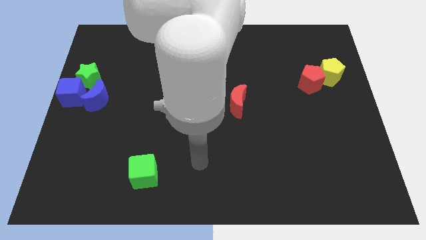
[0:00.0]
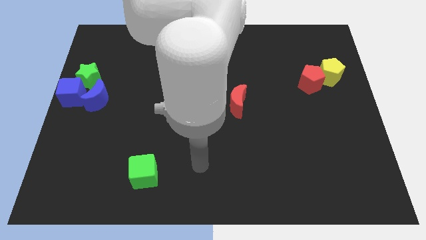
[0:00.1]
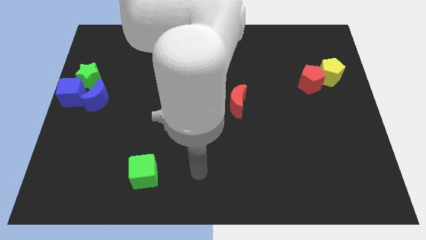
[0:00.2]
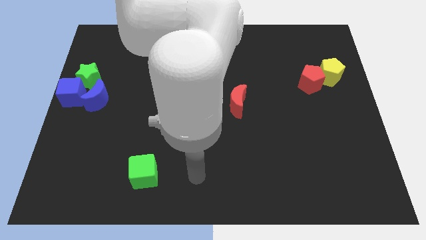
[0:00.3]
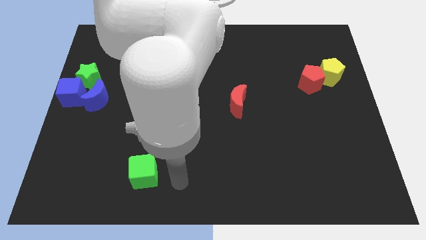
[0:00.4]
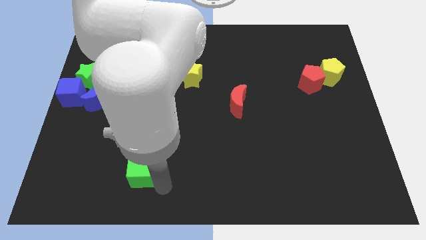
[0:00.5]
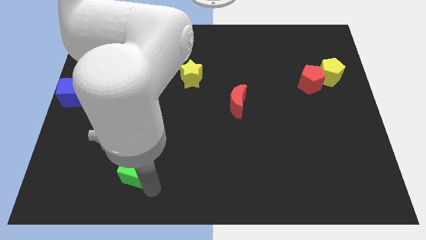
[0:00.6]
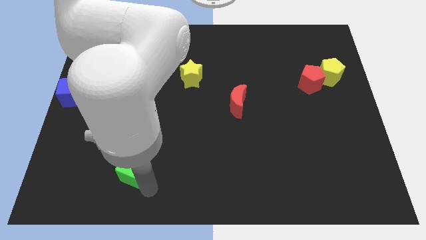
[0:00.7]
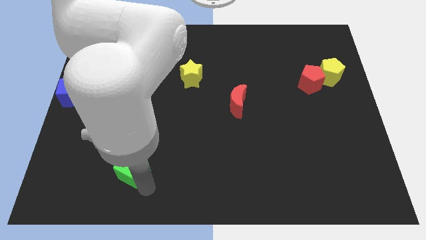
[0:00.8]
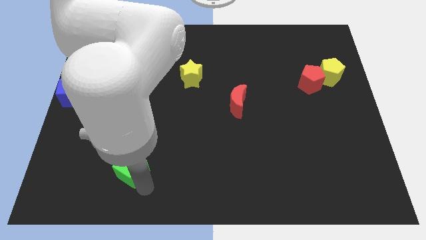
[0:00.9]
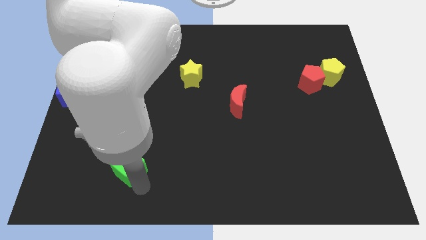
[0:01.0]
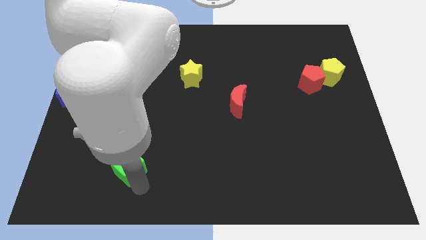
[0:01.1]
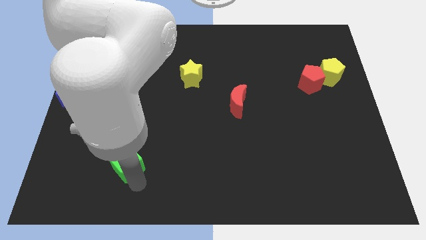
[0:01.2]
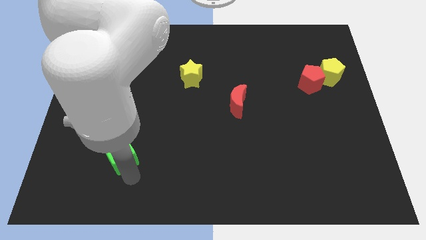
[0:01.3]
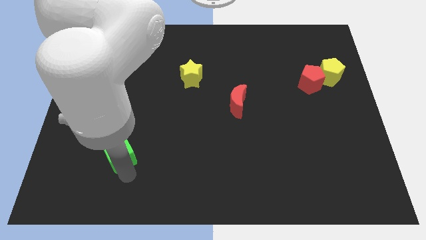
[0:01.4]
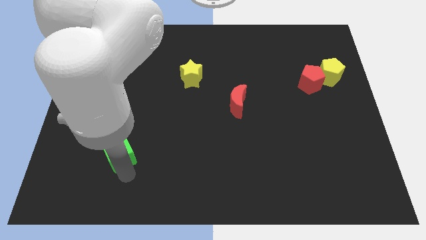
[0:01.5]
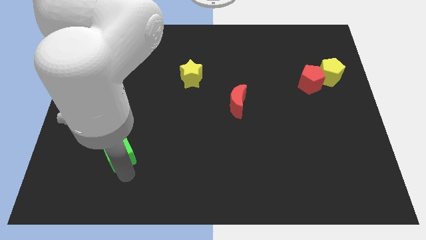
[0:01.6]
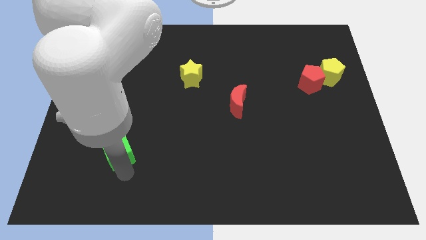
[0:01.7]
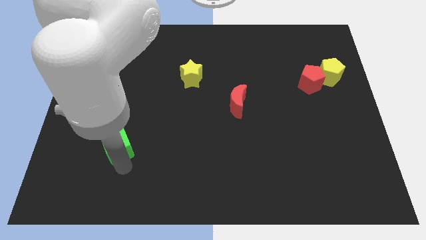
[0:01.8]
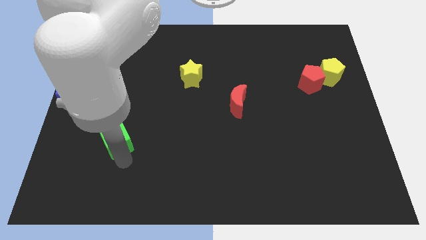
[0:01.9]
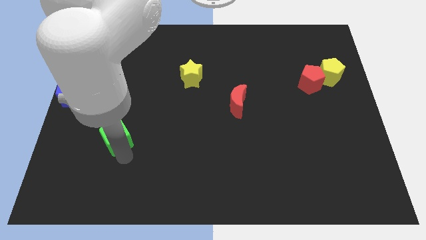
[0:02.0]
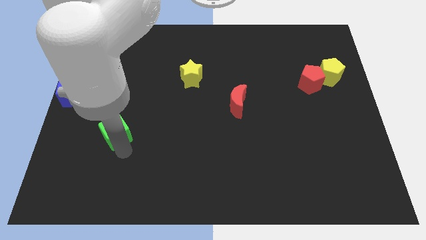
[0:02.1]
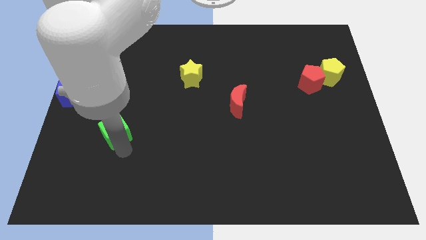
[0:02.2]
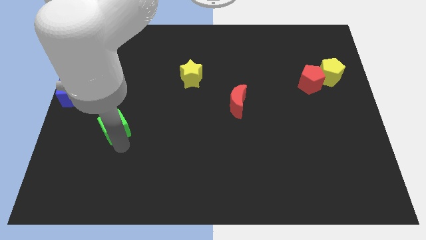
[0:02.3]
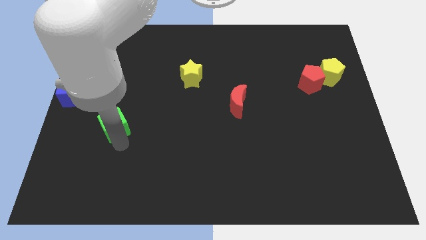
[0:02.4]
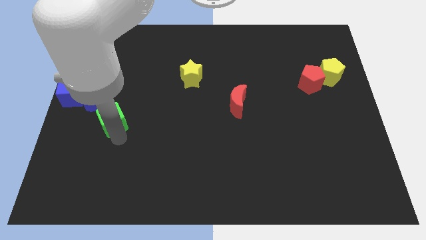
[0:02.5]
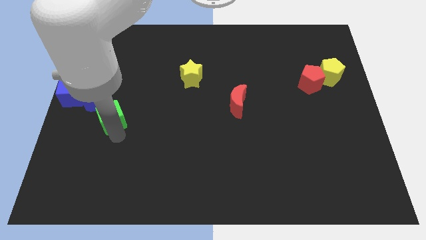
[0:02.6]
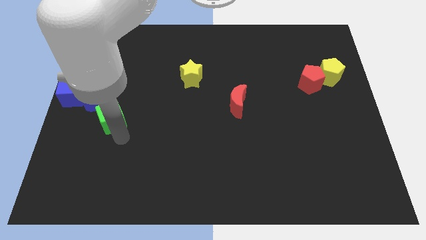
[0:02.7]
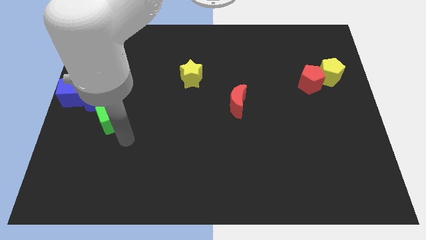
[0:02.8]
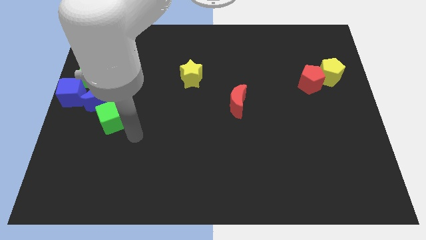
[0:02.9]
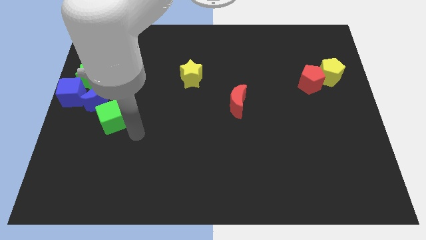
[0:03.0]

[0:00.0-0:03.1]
push green cube near to blue blocks

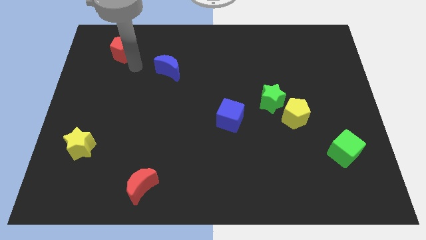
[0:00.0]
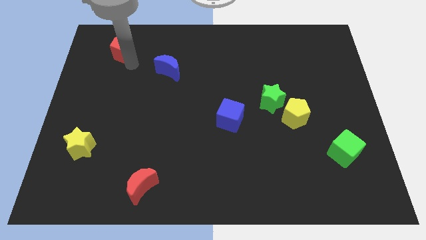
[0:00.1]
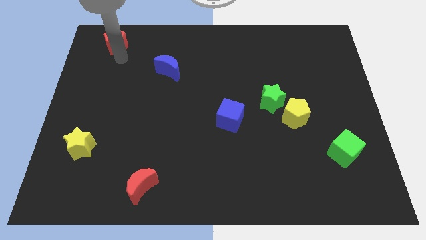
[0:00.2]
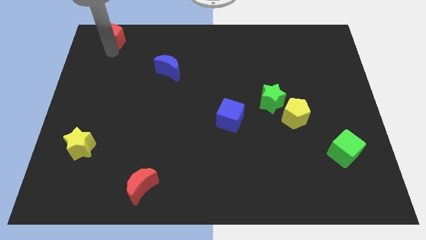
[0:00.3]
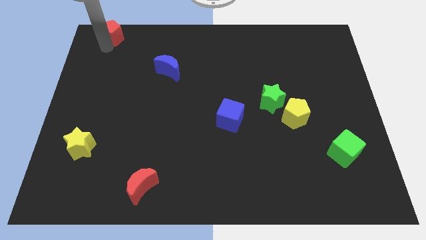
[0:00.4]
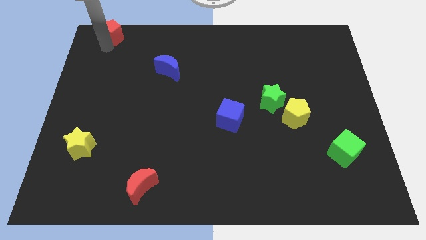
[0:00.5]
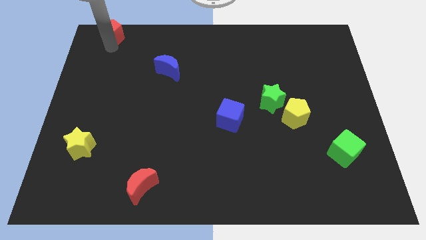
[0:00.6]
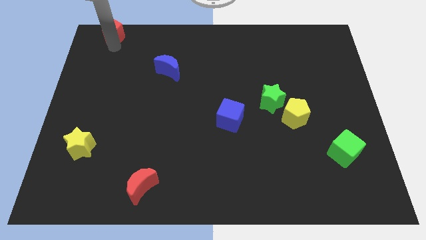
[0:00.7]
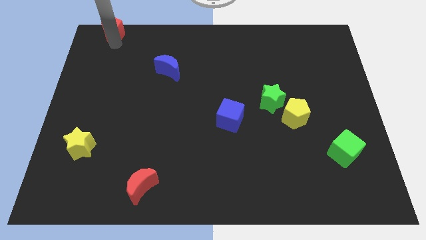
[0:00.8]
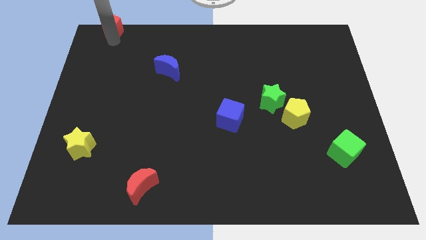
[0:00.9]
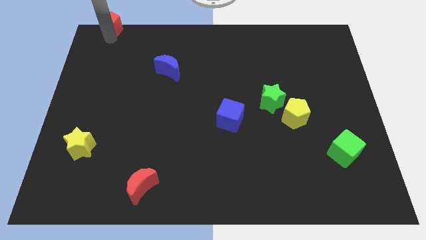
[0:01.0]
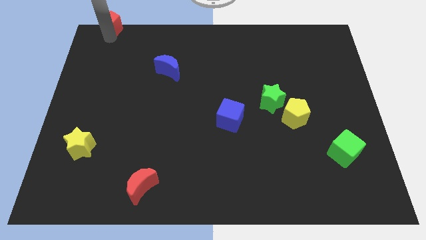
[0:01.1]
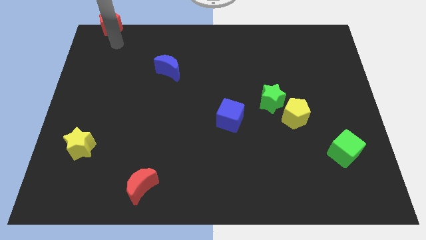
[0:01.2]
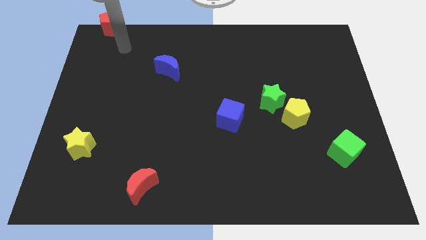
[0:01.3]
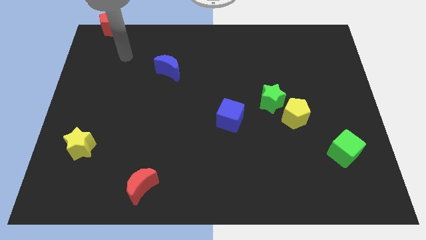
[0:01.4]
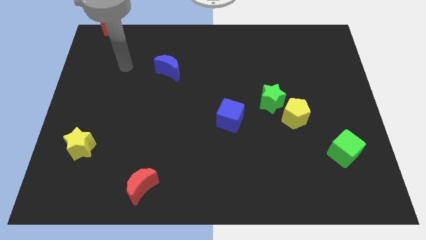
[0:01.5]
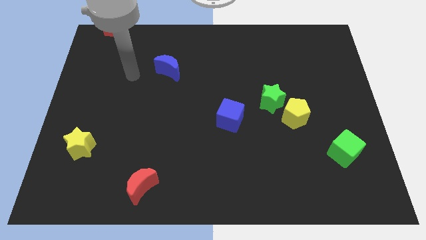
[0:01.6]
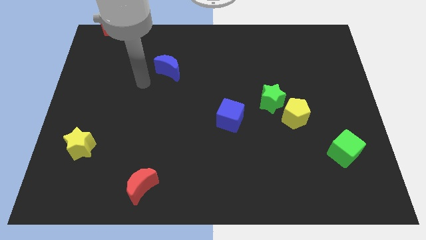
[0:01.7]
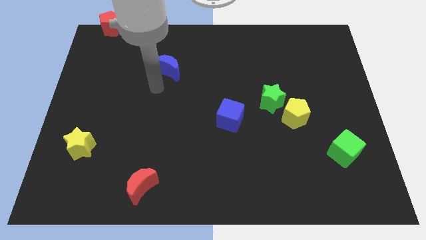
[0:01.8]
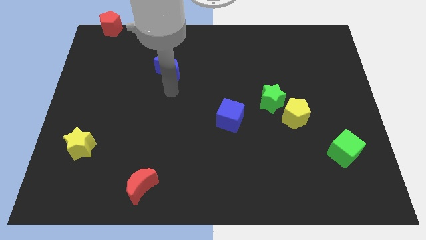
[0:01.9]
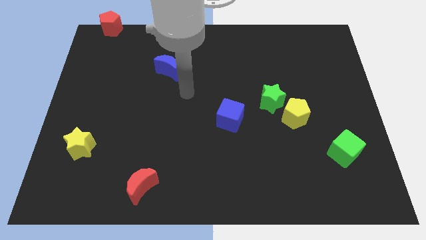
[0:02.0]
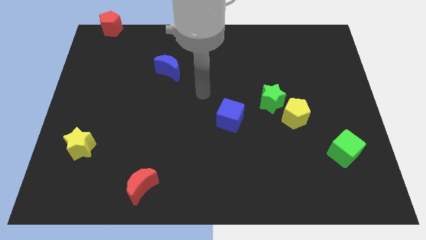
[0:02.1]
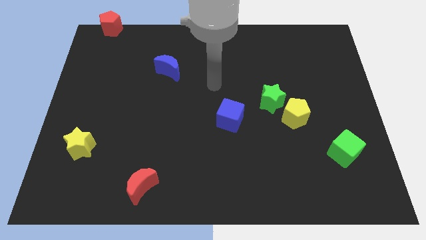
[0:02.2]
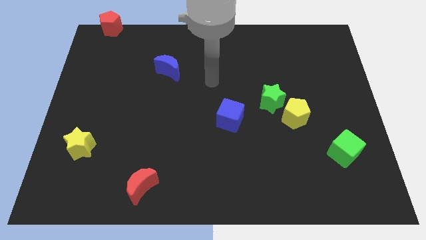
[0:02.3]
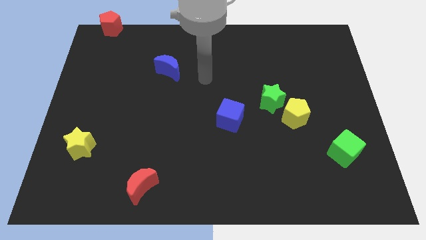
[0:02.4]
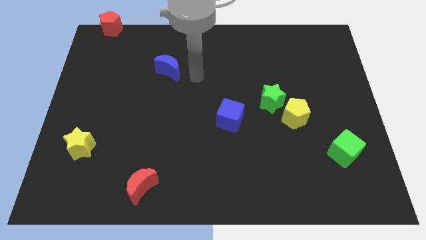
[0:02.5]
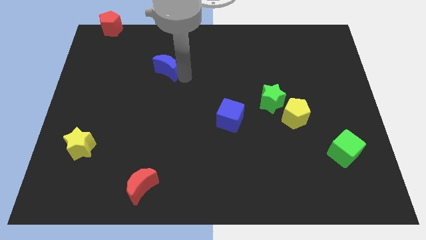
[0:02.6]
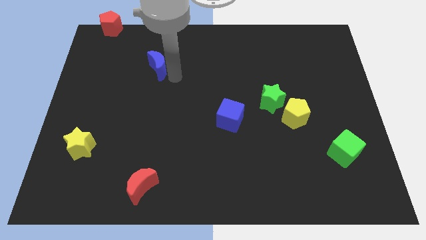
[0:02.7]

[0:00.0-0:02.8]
move red pentagon to the top left

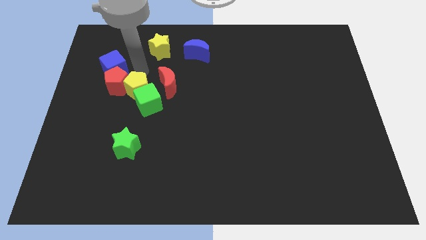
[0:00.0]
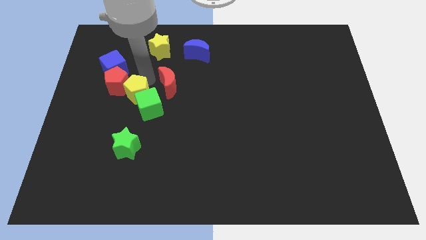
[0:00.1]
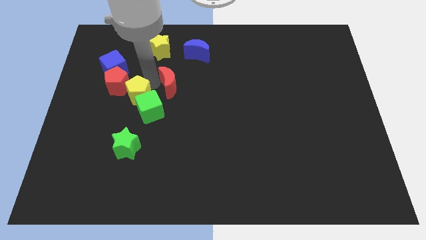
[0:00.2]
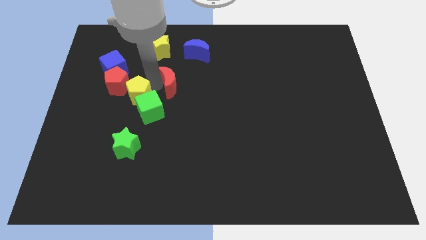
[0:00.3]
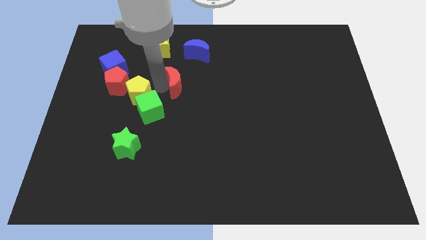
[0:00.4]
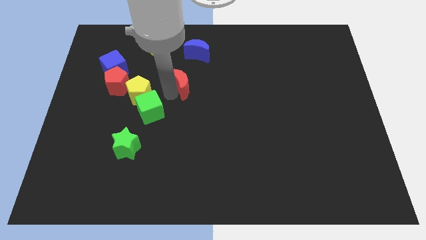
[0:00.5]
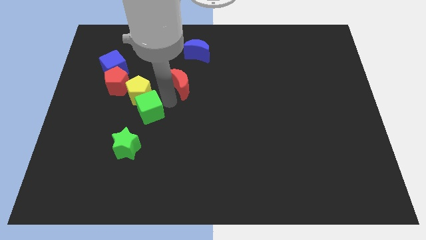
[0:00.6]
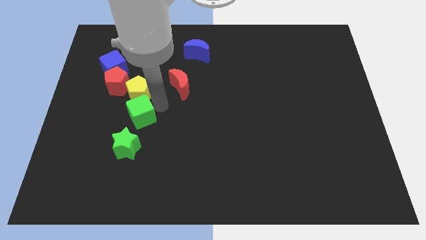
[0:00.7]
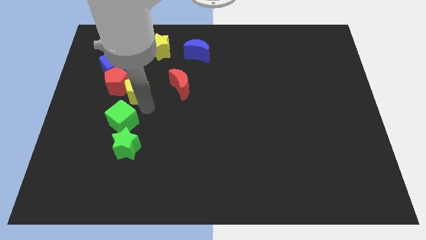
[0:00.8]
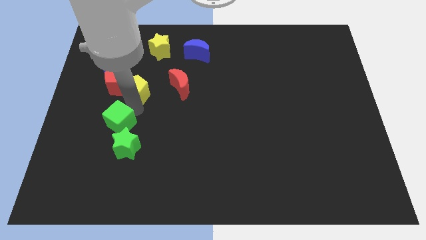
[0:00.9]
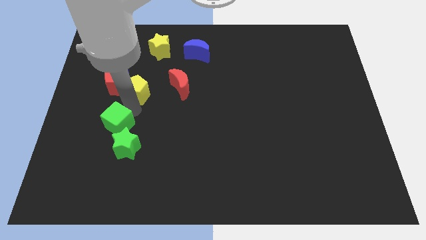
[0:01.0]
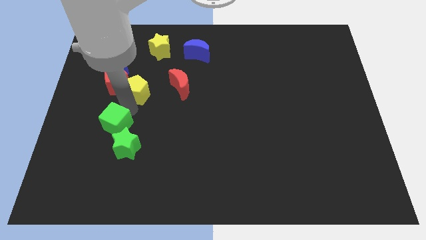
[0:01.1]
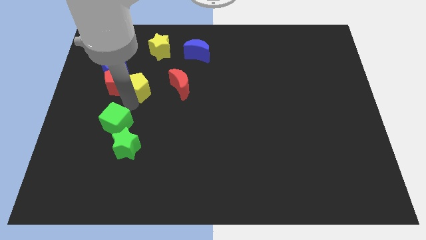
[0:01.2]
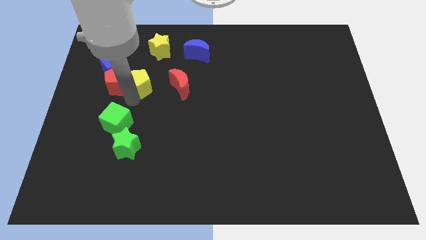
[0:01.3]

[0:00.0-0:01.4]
place the green cube above the green star

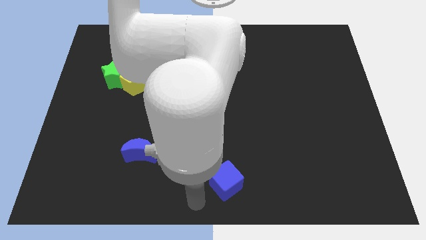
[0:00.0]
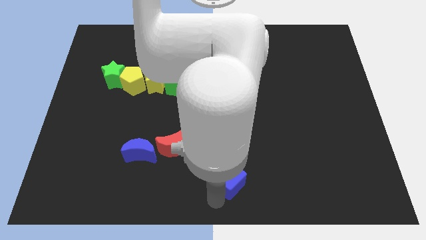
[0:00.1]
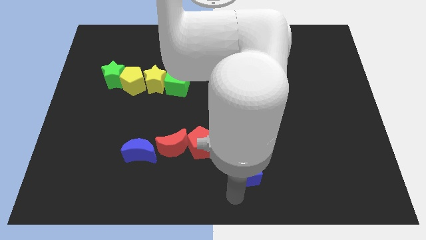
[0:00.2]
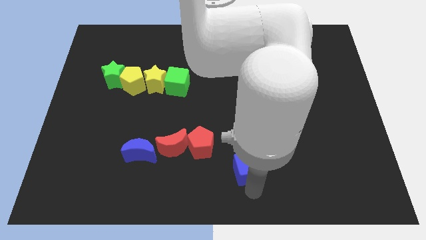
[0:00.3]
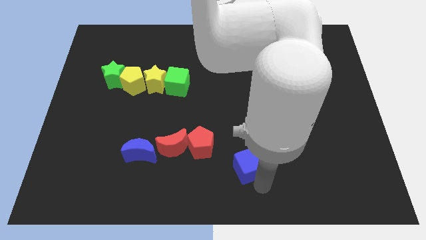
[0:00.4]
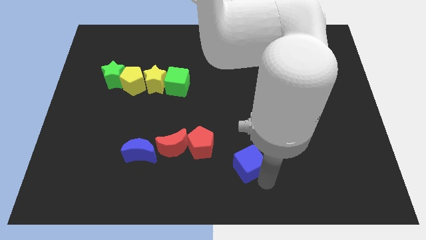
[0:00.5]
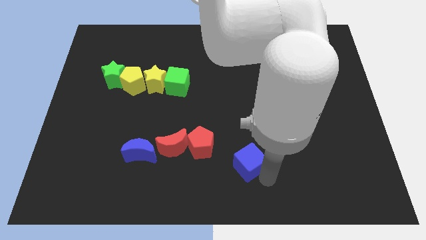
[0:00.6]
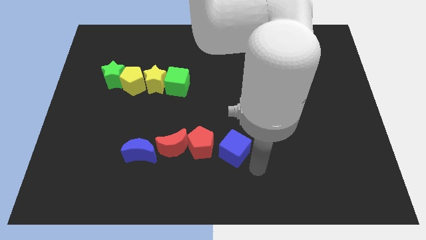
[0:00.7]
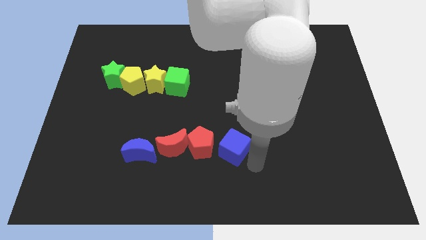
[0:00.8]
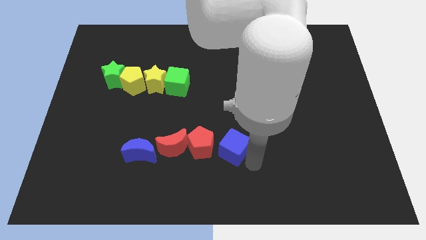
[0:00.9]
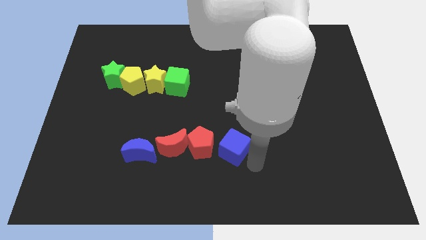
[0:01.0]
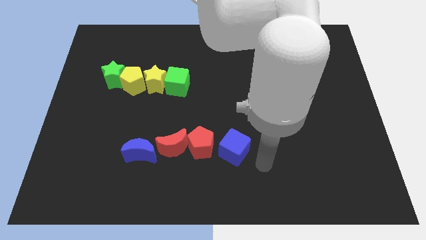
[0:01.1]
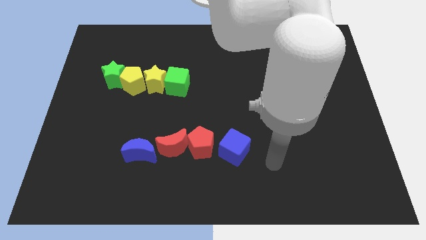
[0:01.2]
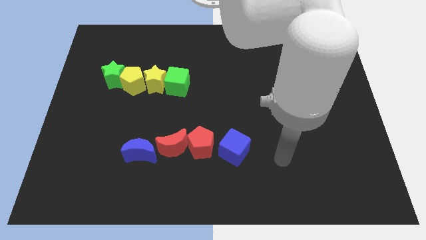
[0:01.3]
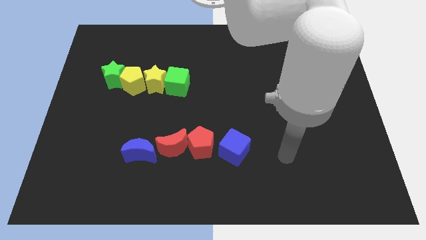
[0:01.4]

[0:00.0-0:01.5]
place the blue cube close to the red pentagon

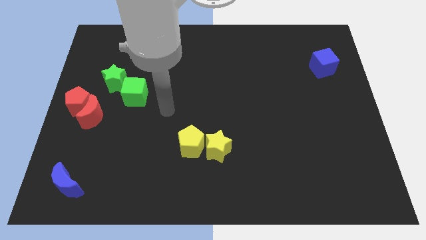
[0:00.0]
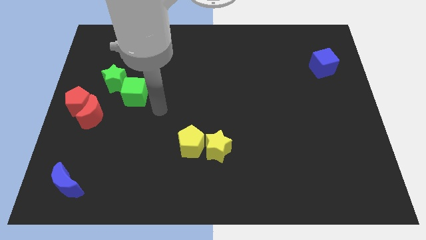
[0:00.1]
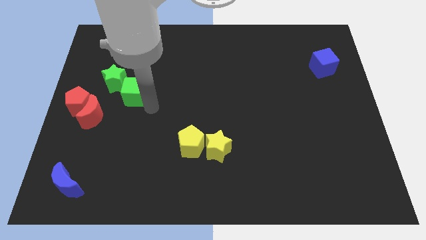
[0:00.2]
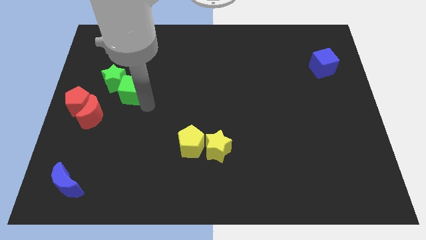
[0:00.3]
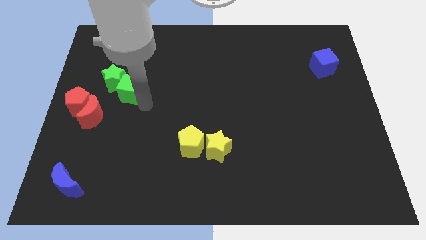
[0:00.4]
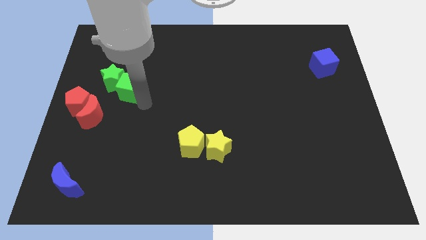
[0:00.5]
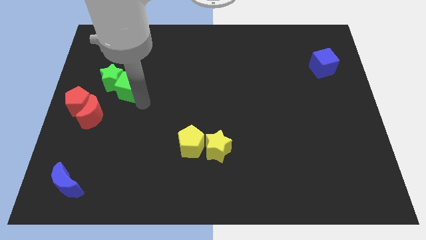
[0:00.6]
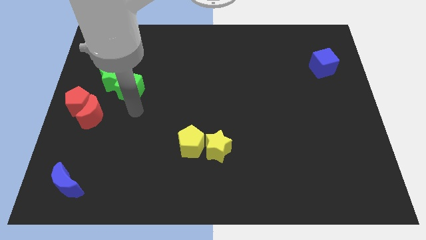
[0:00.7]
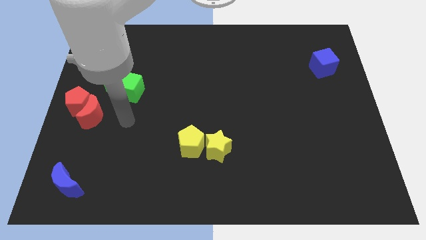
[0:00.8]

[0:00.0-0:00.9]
push green cube in to green star
